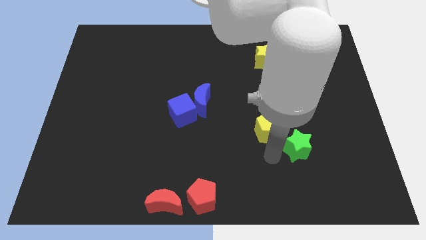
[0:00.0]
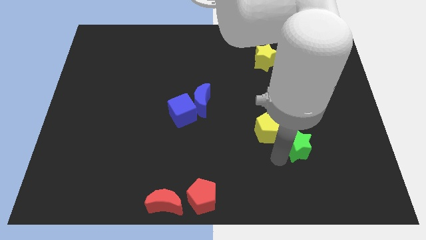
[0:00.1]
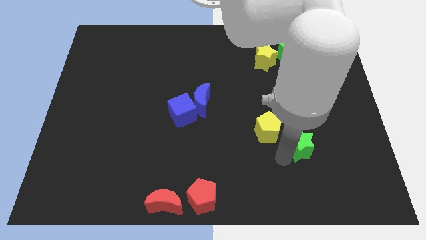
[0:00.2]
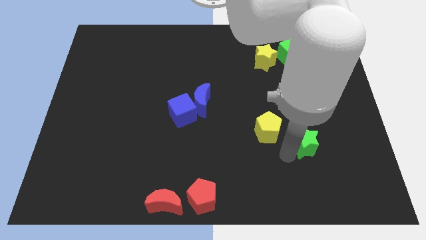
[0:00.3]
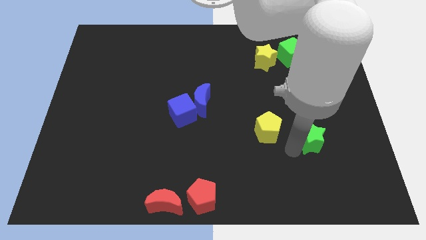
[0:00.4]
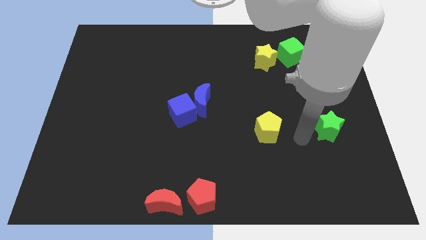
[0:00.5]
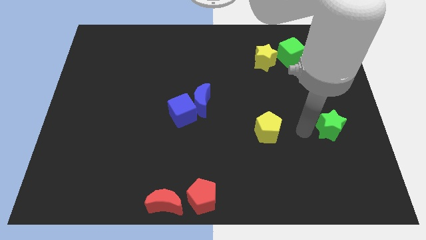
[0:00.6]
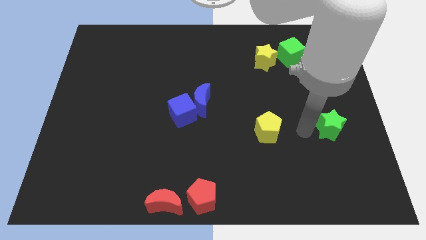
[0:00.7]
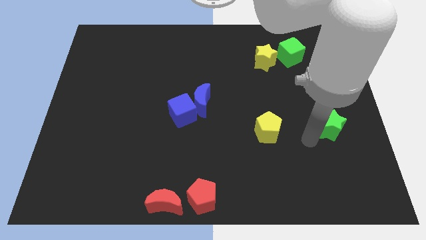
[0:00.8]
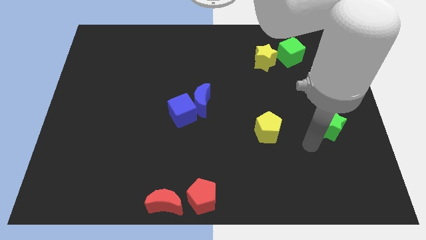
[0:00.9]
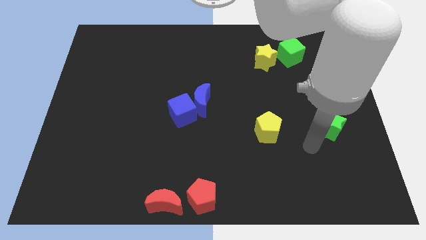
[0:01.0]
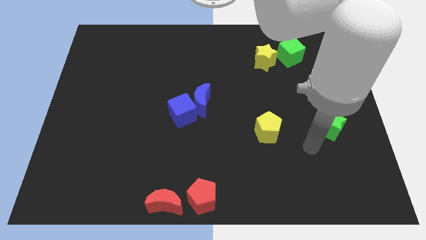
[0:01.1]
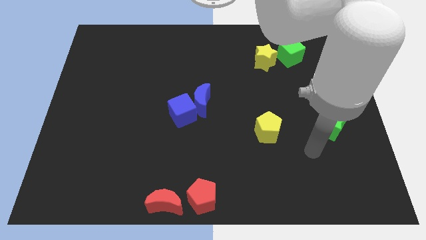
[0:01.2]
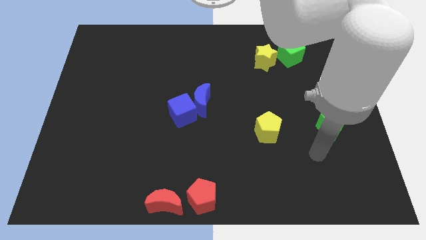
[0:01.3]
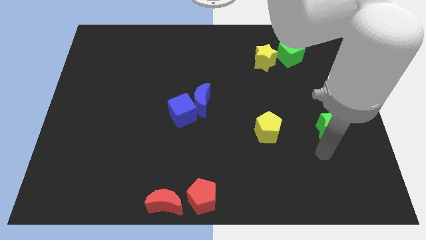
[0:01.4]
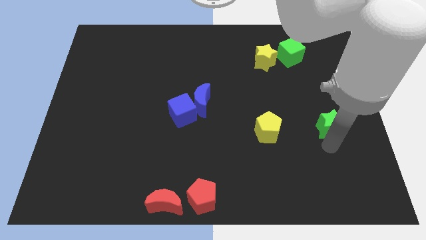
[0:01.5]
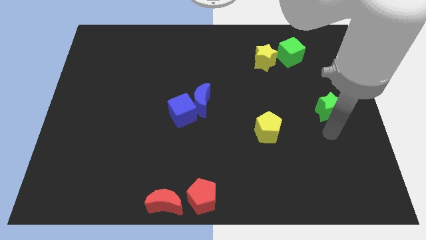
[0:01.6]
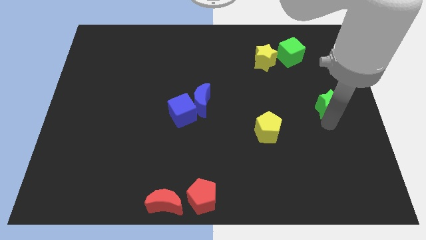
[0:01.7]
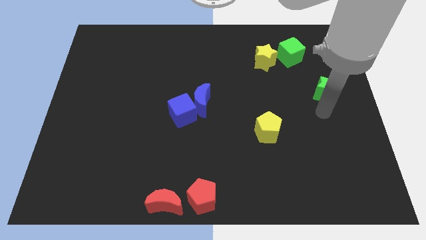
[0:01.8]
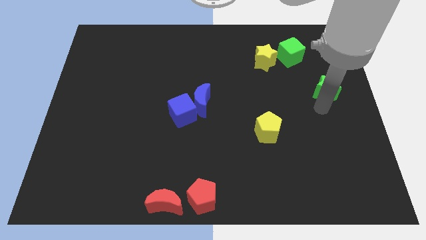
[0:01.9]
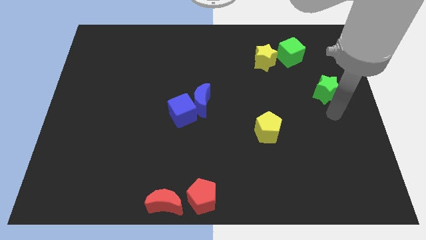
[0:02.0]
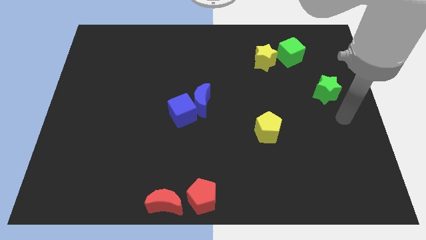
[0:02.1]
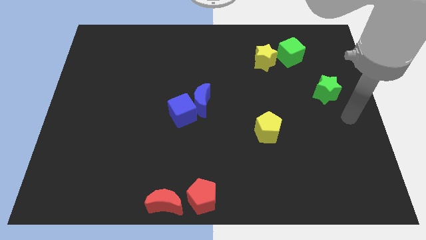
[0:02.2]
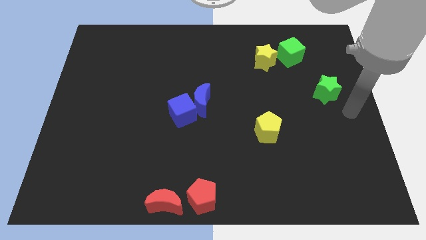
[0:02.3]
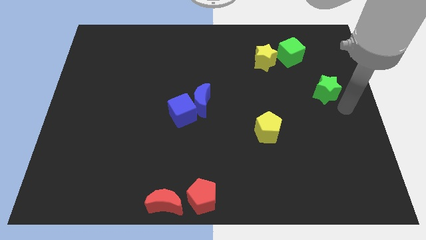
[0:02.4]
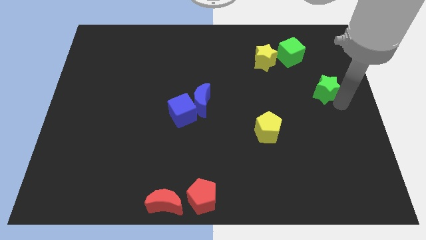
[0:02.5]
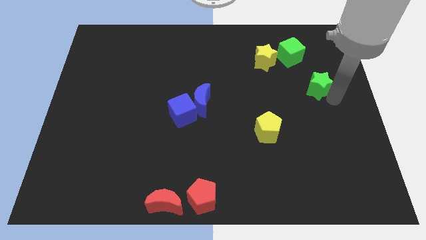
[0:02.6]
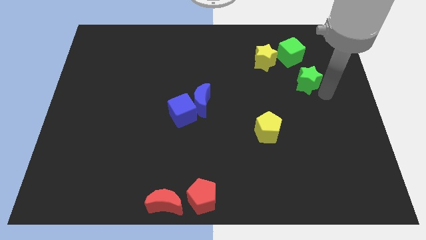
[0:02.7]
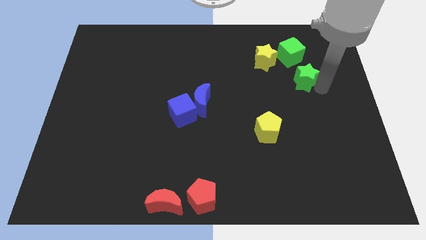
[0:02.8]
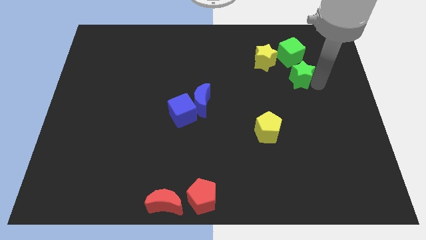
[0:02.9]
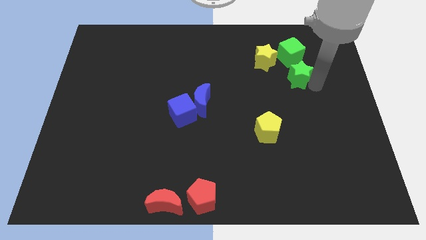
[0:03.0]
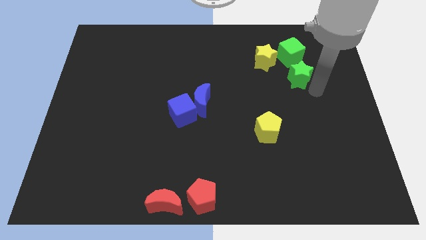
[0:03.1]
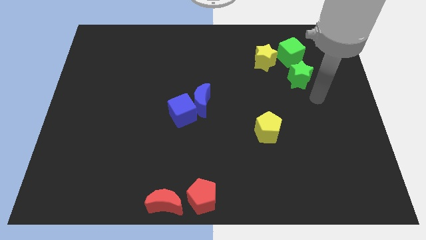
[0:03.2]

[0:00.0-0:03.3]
move the green star below into the green cube

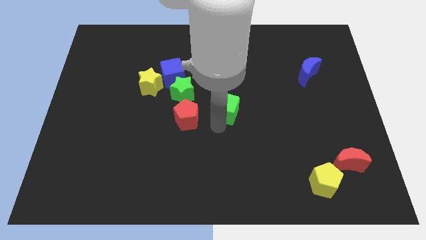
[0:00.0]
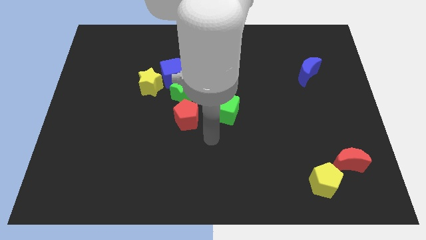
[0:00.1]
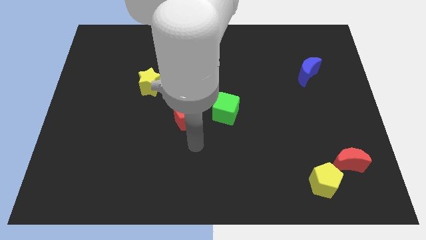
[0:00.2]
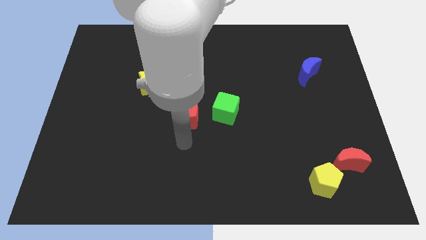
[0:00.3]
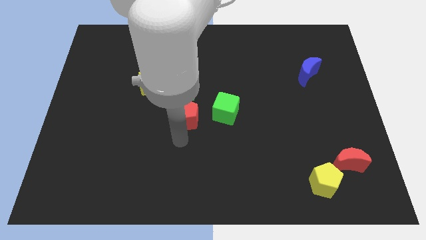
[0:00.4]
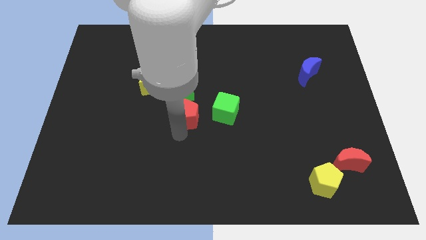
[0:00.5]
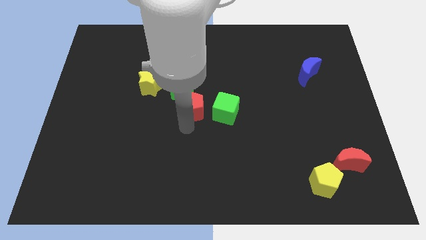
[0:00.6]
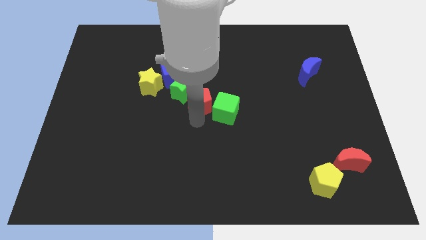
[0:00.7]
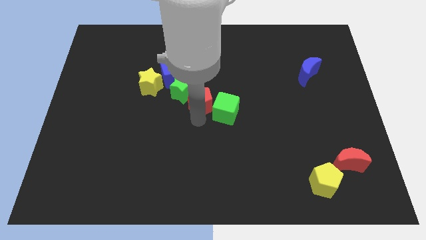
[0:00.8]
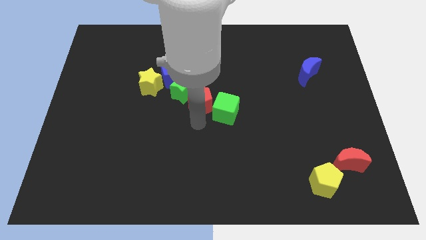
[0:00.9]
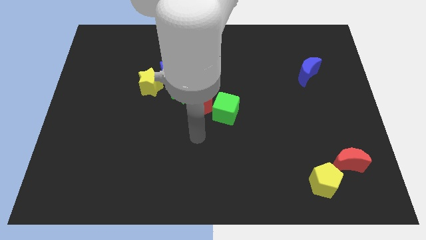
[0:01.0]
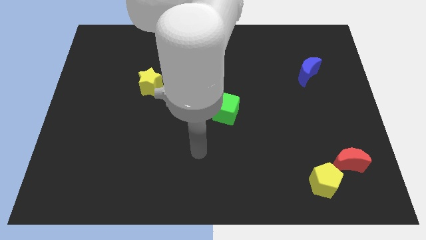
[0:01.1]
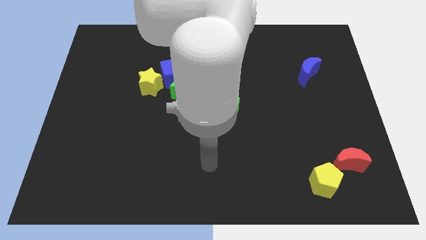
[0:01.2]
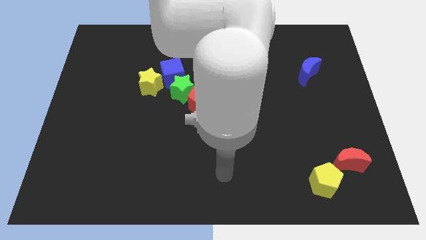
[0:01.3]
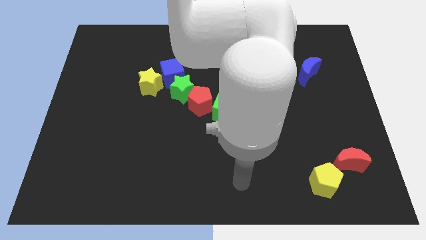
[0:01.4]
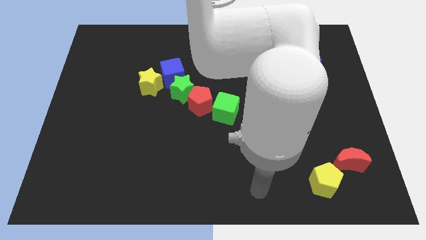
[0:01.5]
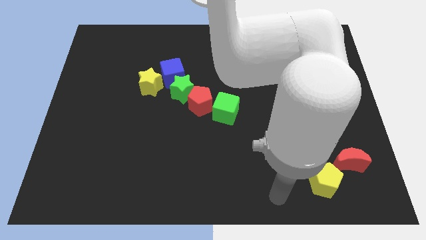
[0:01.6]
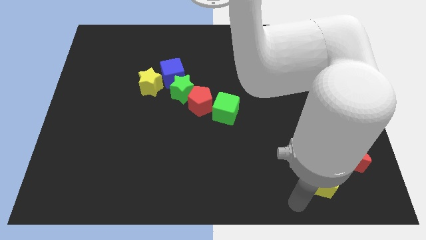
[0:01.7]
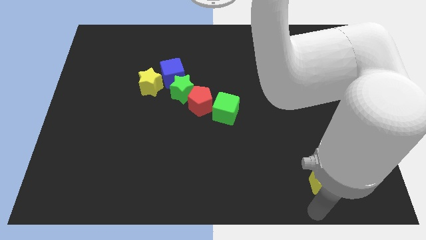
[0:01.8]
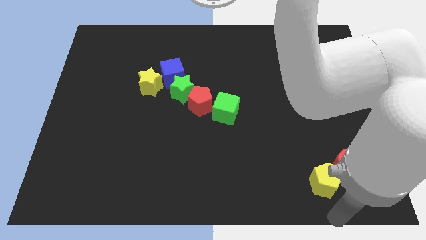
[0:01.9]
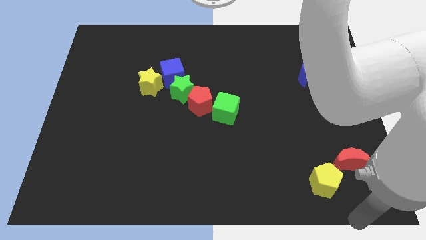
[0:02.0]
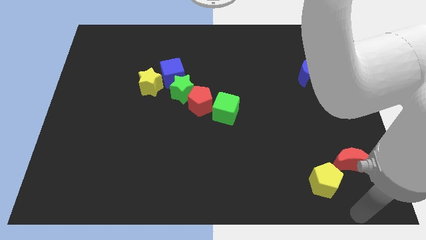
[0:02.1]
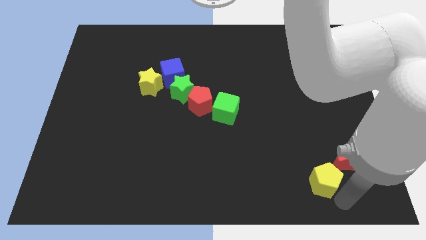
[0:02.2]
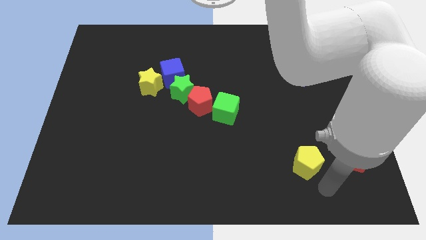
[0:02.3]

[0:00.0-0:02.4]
place the red pentagon in between green cube and green star

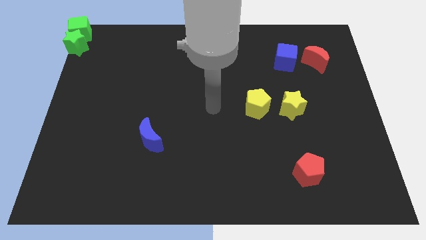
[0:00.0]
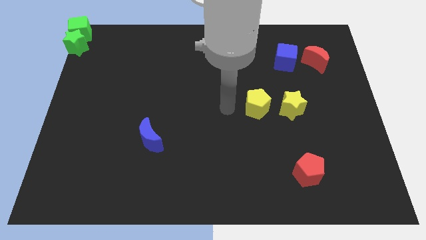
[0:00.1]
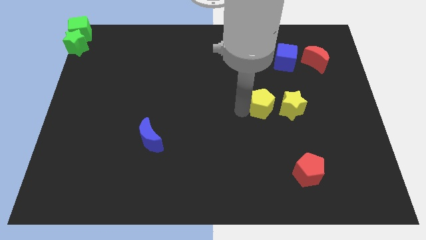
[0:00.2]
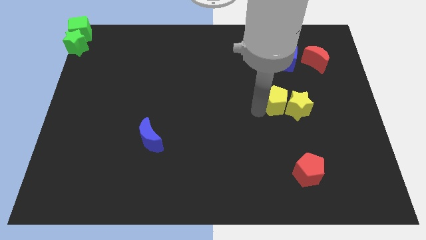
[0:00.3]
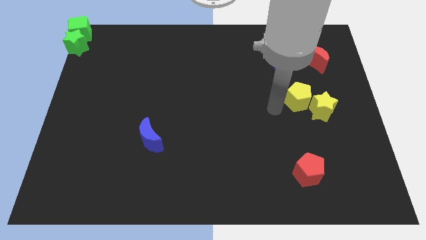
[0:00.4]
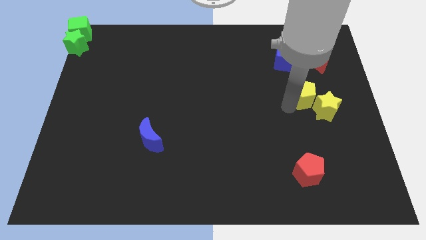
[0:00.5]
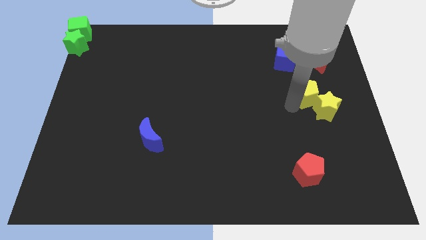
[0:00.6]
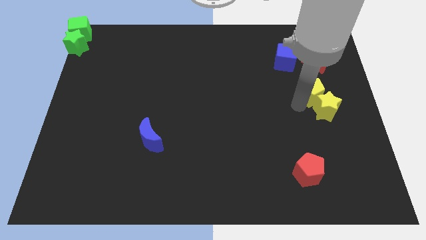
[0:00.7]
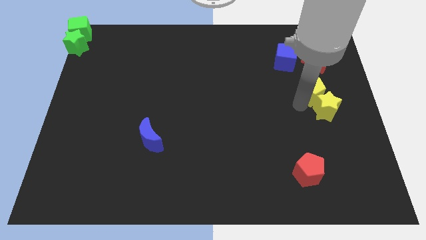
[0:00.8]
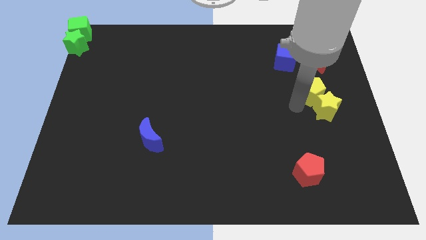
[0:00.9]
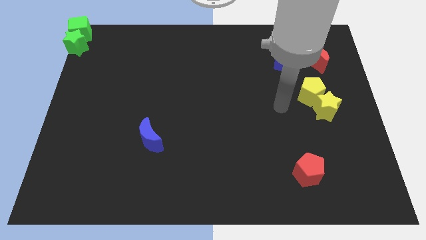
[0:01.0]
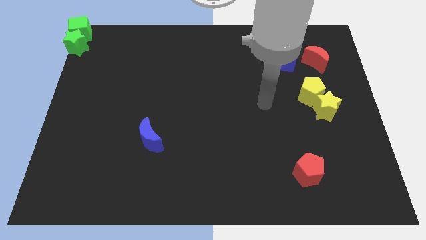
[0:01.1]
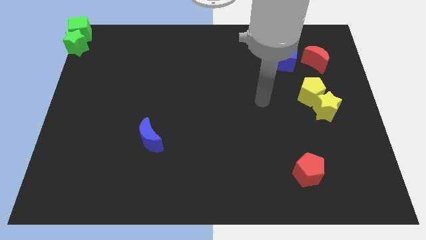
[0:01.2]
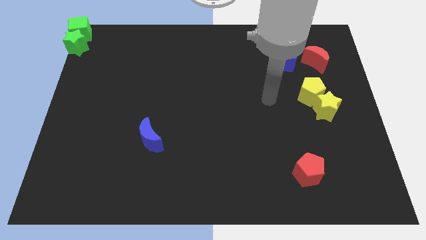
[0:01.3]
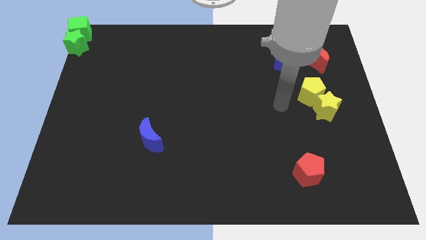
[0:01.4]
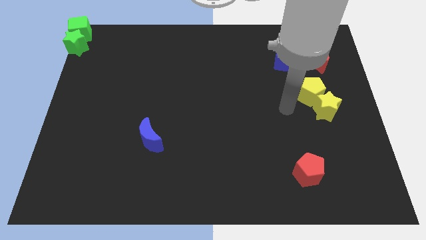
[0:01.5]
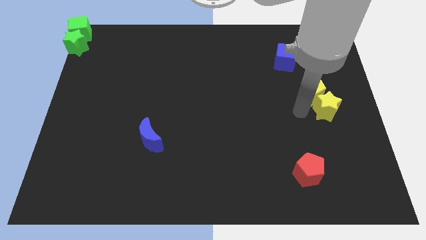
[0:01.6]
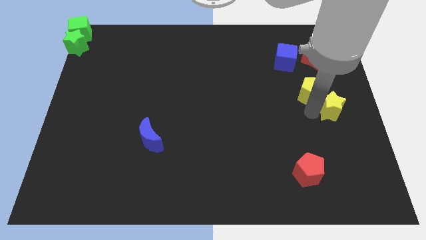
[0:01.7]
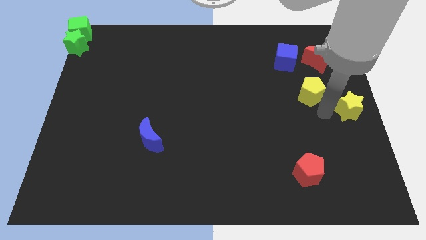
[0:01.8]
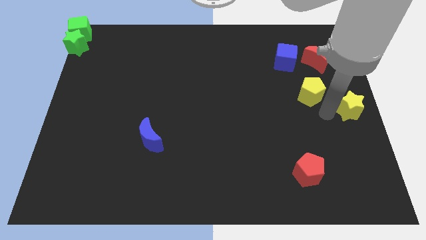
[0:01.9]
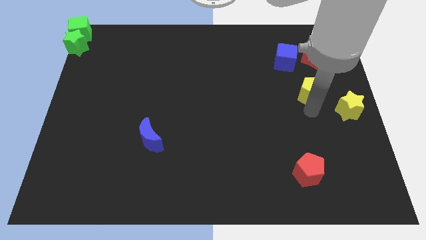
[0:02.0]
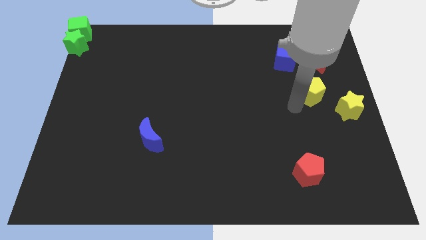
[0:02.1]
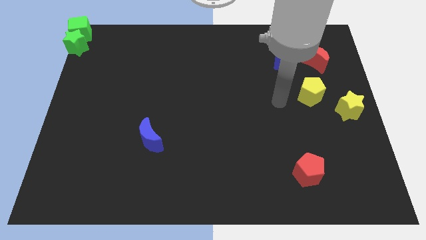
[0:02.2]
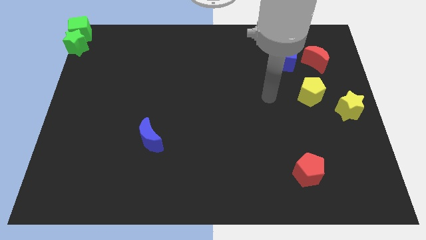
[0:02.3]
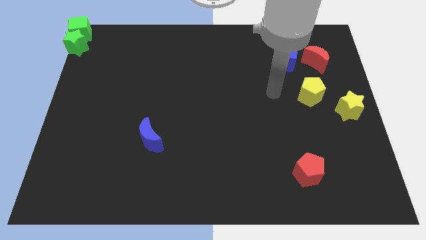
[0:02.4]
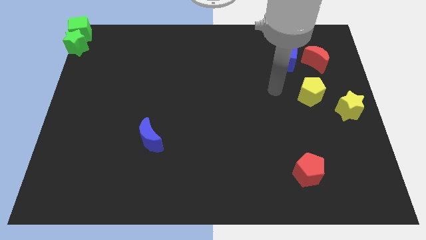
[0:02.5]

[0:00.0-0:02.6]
place the yellow star to the middle right

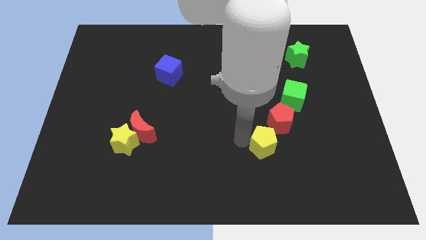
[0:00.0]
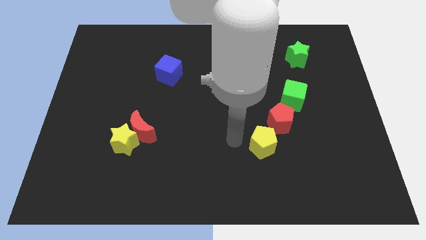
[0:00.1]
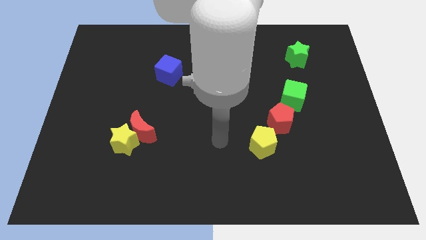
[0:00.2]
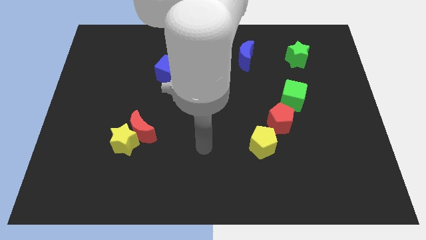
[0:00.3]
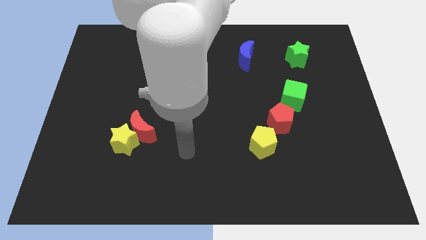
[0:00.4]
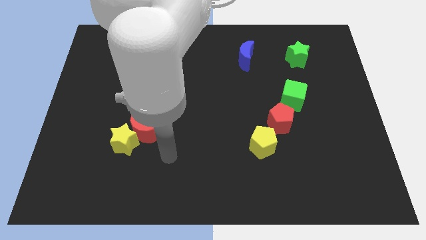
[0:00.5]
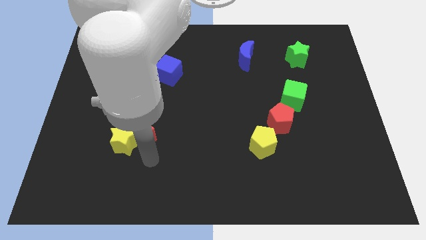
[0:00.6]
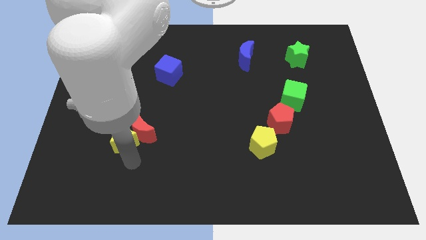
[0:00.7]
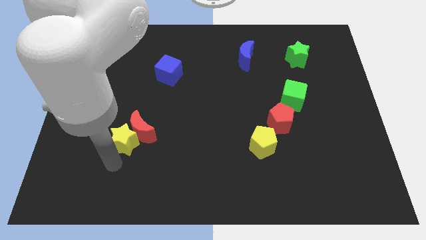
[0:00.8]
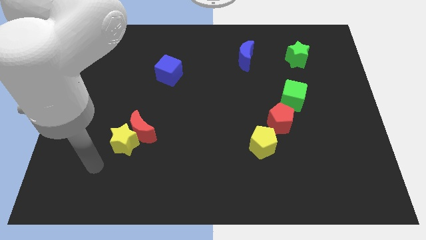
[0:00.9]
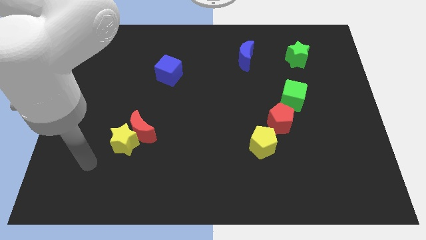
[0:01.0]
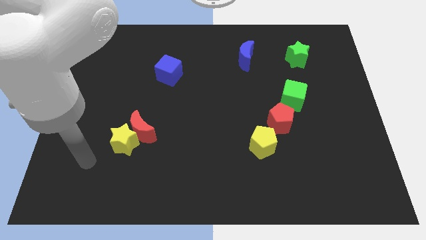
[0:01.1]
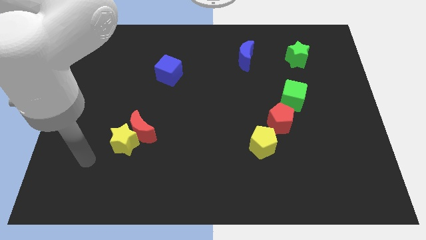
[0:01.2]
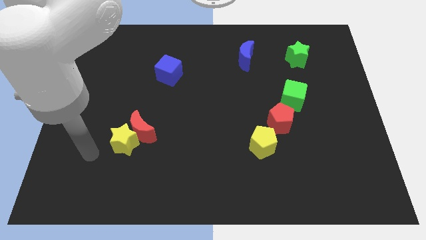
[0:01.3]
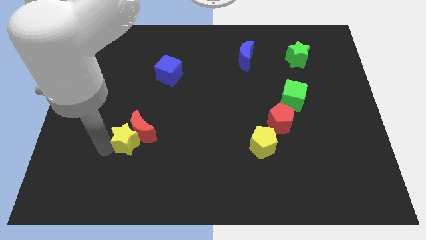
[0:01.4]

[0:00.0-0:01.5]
place your arm to the left of the yellow star
